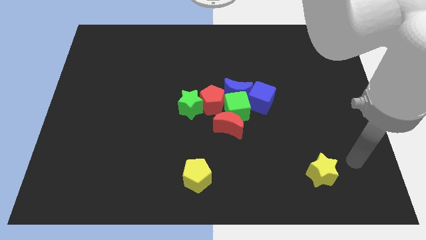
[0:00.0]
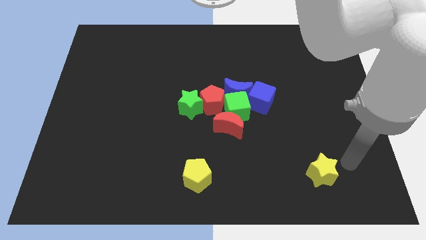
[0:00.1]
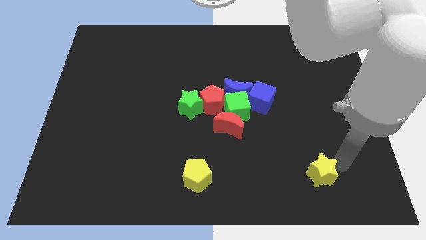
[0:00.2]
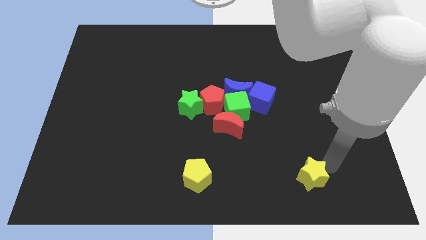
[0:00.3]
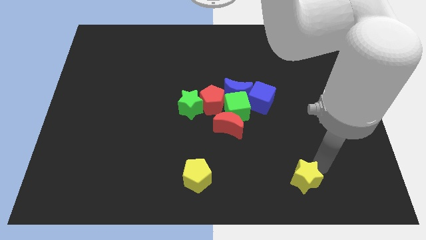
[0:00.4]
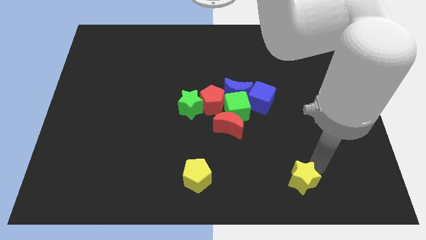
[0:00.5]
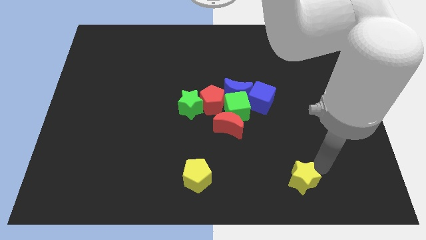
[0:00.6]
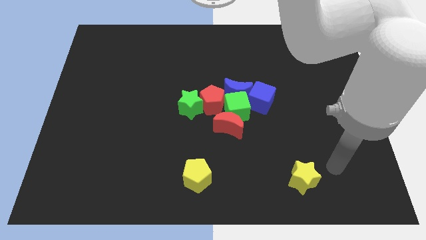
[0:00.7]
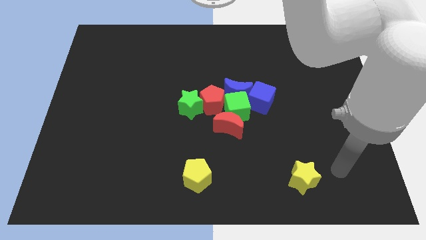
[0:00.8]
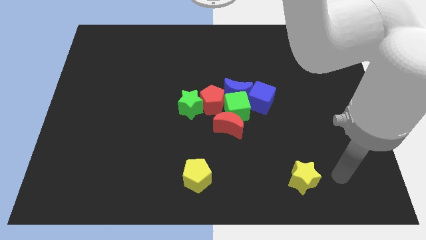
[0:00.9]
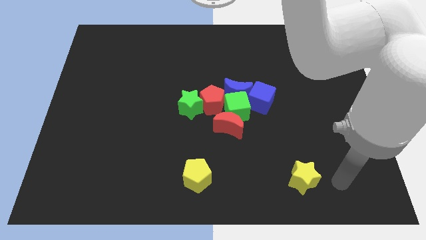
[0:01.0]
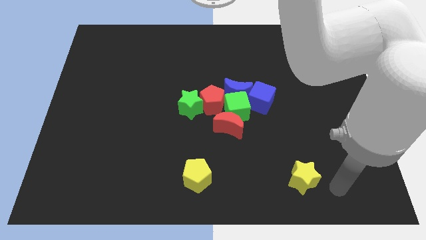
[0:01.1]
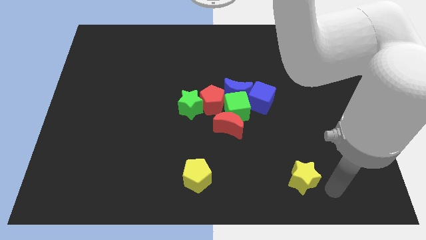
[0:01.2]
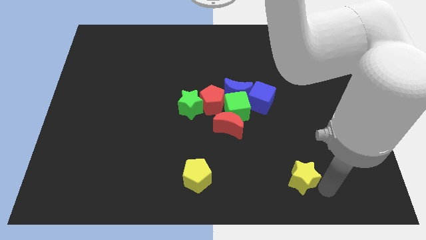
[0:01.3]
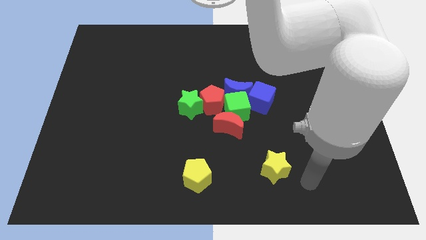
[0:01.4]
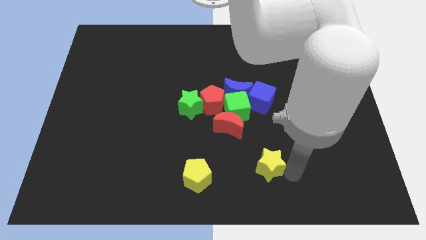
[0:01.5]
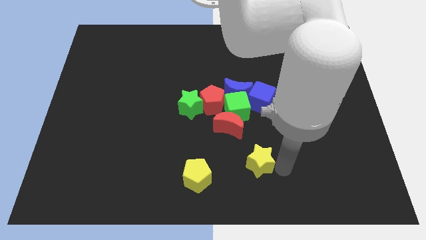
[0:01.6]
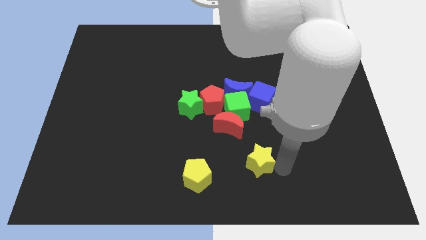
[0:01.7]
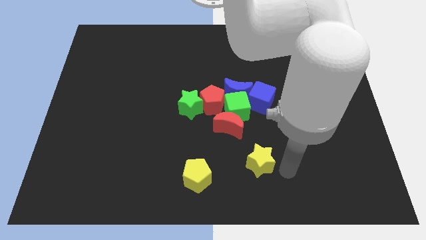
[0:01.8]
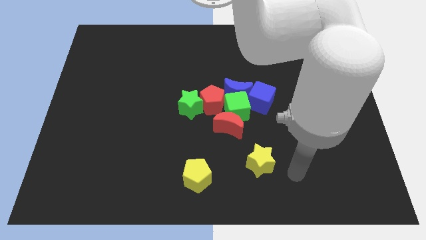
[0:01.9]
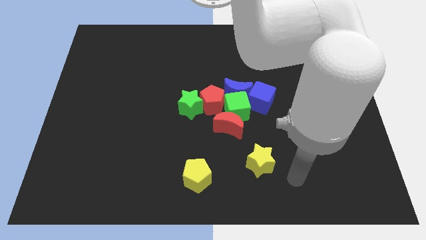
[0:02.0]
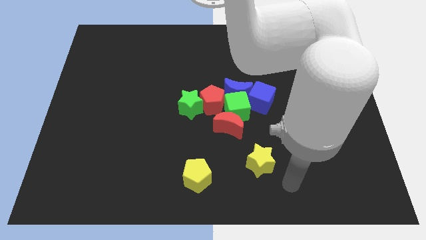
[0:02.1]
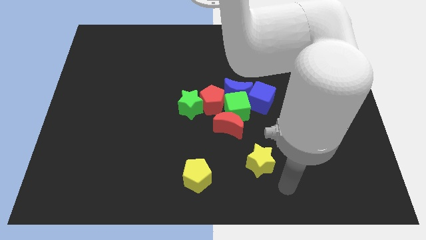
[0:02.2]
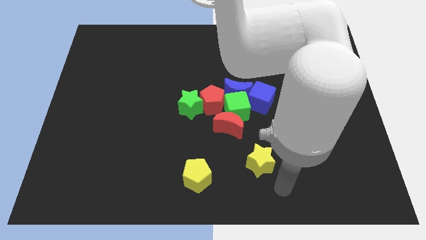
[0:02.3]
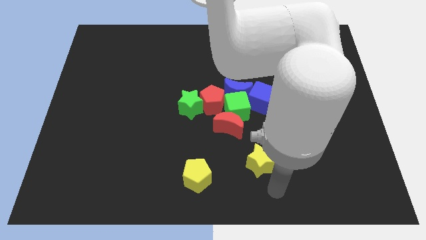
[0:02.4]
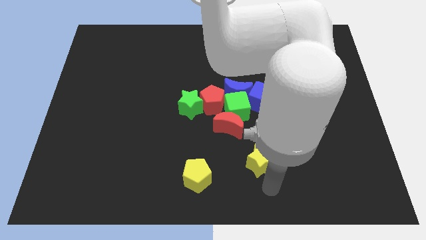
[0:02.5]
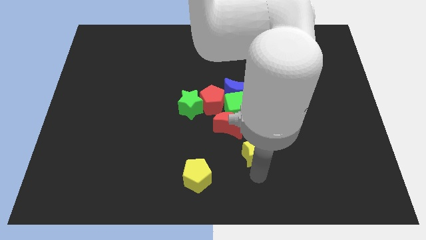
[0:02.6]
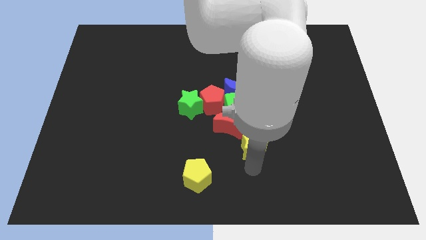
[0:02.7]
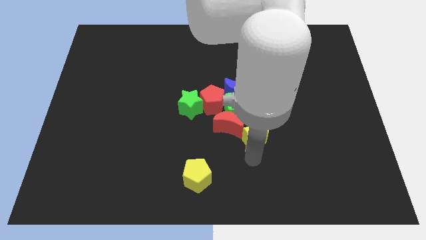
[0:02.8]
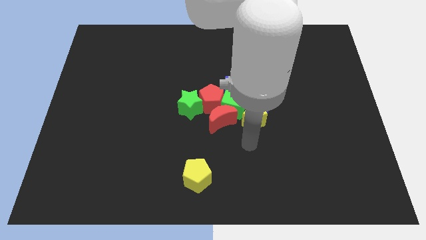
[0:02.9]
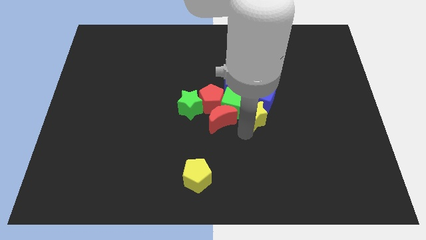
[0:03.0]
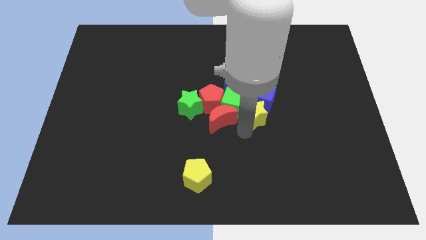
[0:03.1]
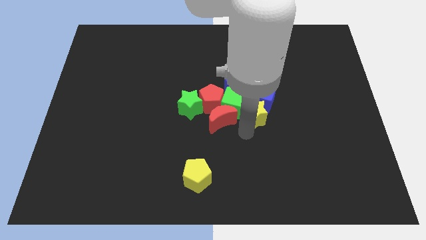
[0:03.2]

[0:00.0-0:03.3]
place the yellow star at the bottom of the blue cube

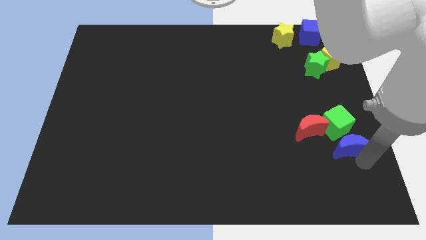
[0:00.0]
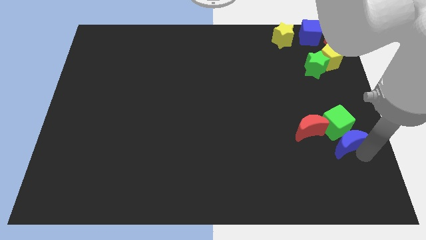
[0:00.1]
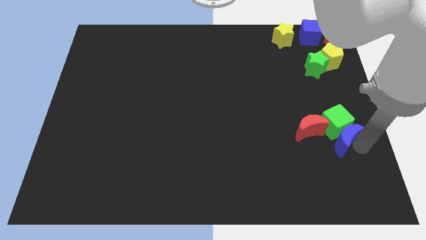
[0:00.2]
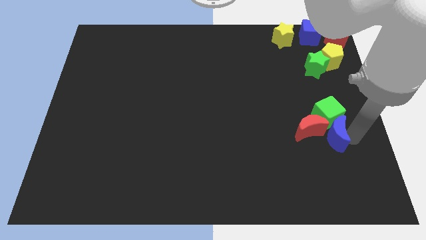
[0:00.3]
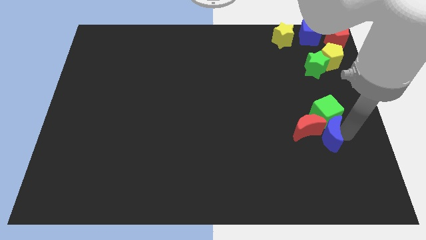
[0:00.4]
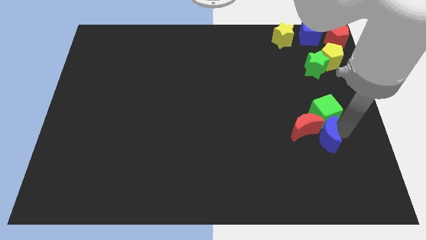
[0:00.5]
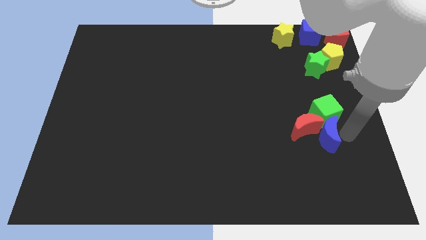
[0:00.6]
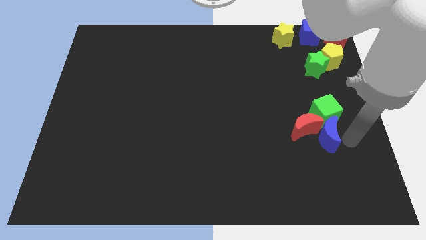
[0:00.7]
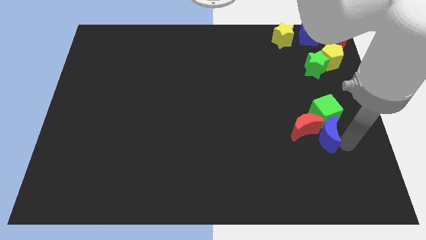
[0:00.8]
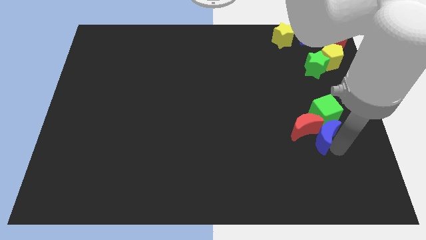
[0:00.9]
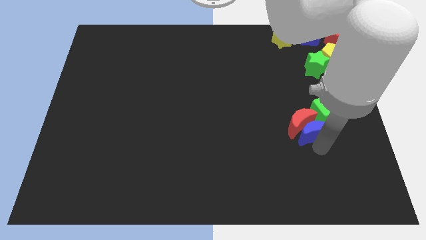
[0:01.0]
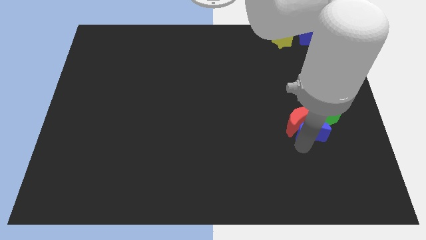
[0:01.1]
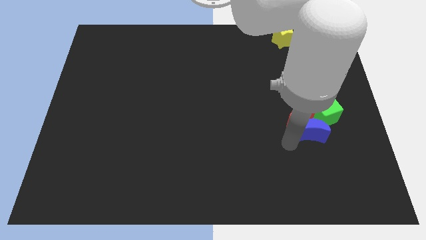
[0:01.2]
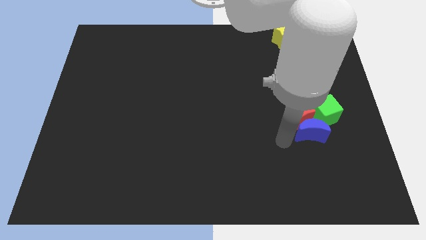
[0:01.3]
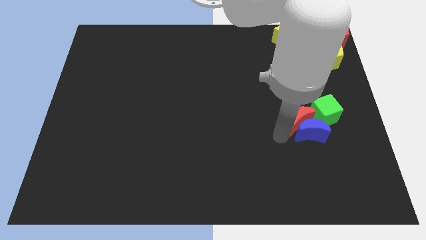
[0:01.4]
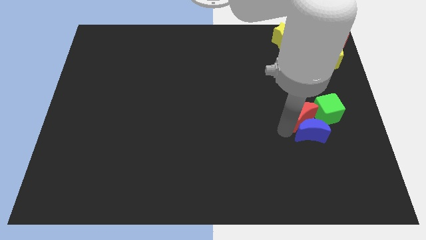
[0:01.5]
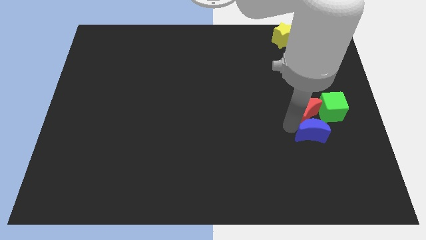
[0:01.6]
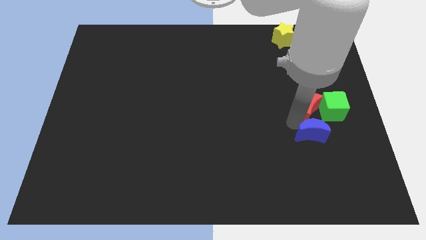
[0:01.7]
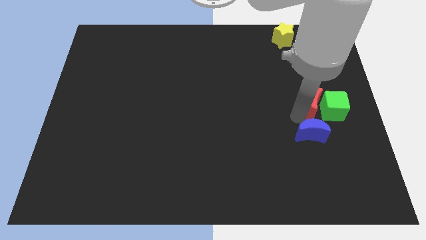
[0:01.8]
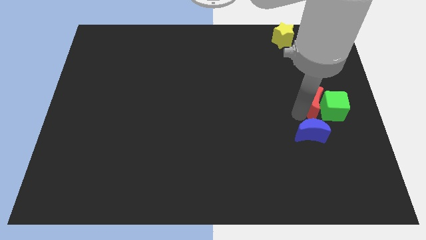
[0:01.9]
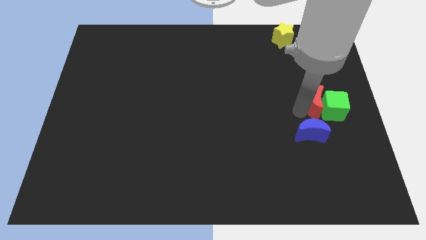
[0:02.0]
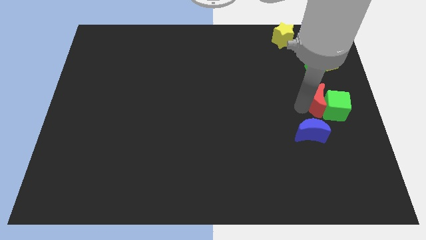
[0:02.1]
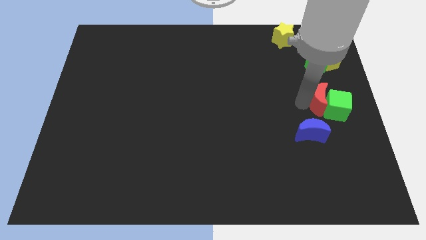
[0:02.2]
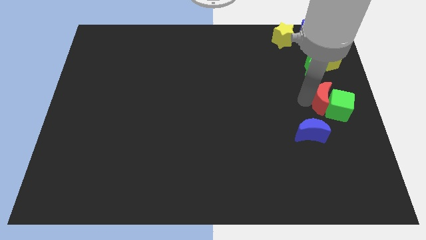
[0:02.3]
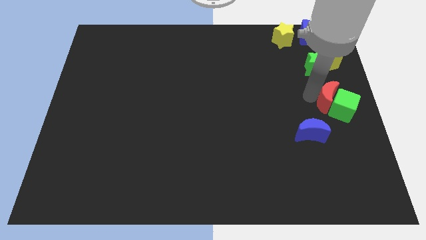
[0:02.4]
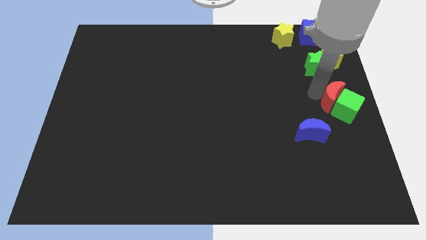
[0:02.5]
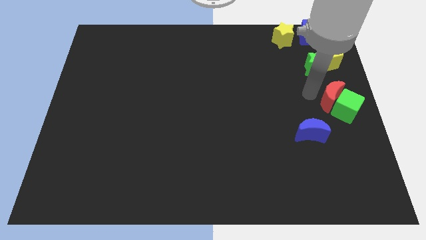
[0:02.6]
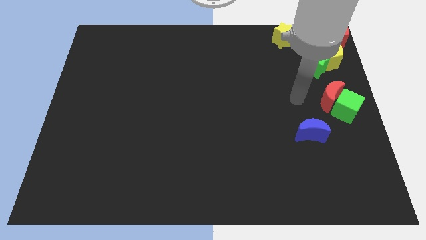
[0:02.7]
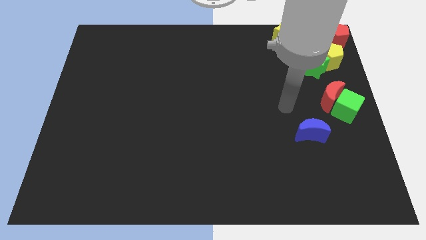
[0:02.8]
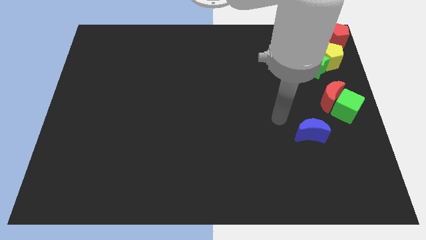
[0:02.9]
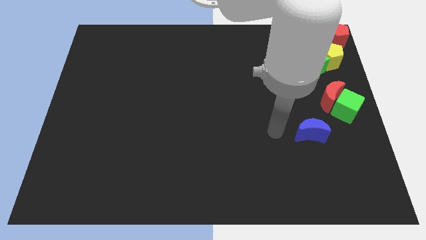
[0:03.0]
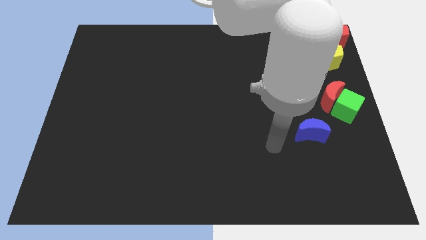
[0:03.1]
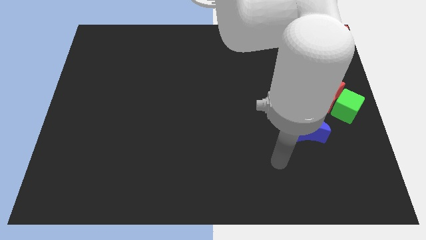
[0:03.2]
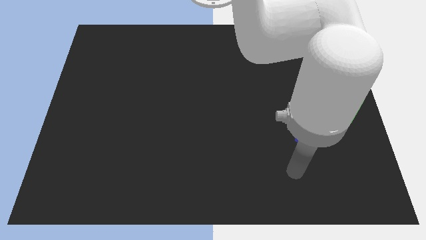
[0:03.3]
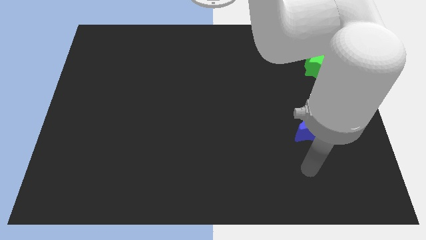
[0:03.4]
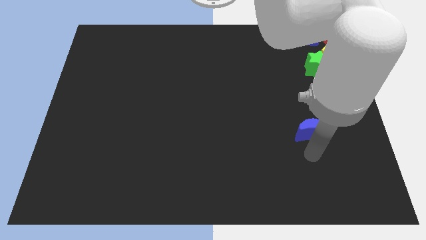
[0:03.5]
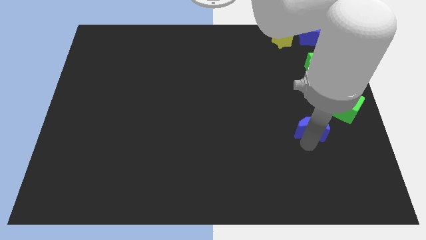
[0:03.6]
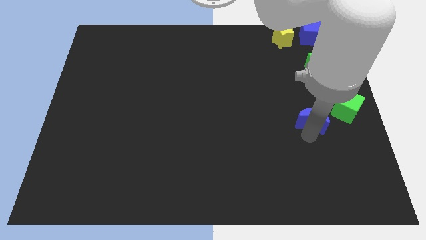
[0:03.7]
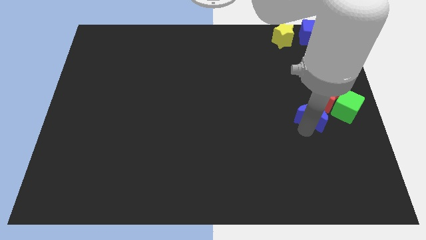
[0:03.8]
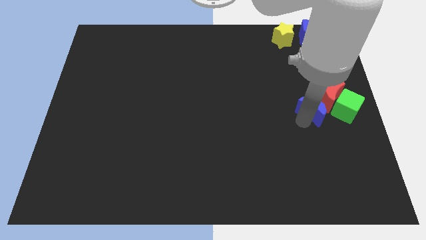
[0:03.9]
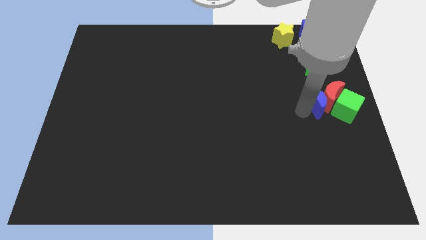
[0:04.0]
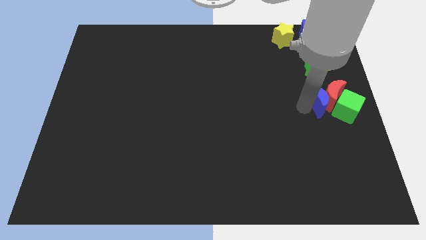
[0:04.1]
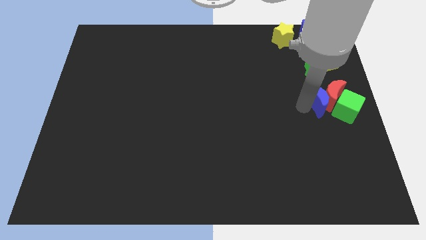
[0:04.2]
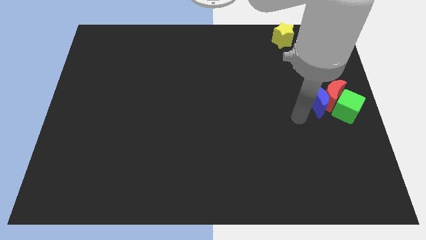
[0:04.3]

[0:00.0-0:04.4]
move the blue crescent left to the red moon

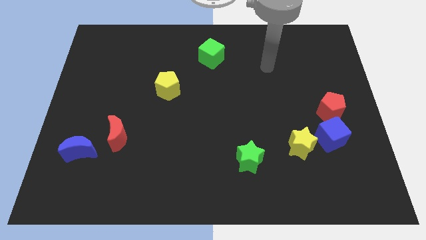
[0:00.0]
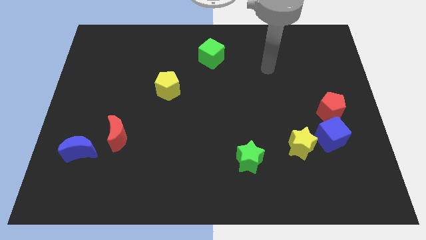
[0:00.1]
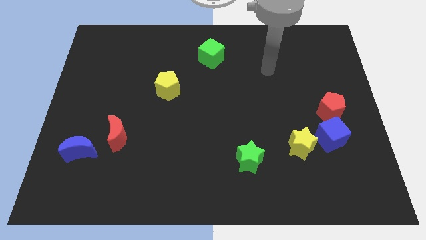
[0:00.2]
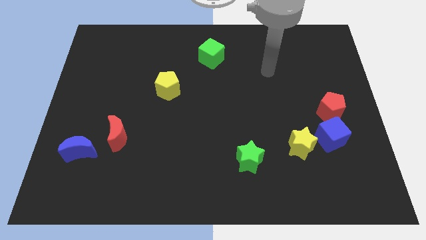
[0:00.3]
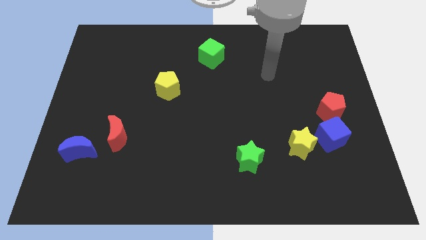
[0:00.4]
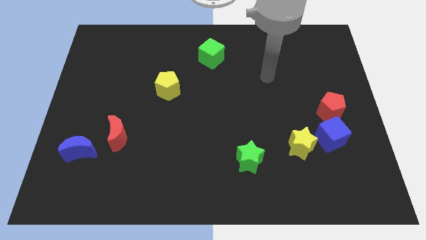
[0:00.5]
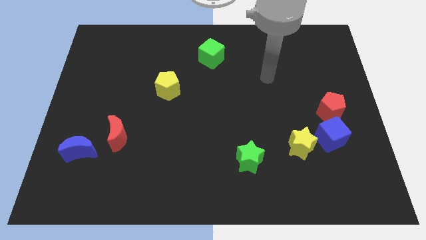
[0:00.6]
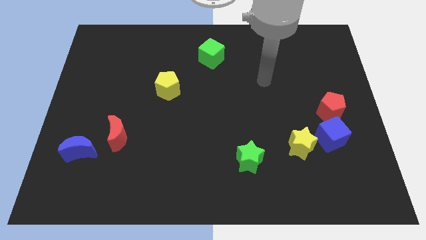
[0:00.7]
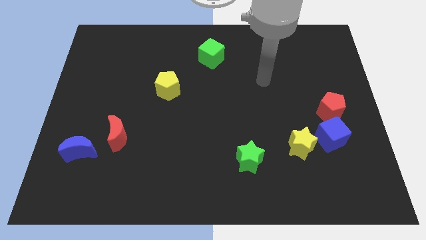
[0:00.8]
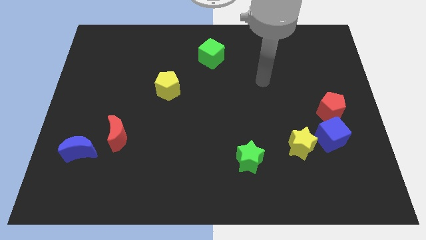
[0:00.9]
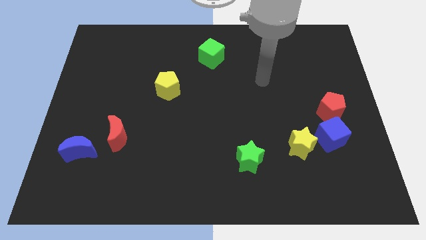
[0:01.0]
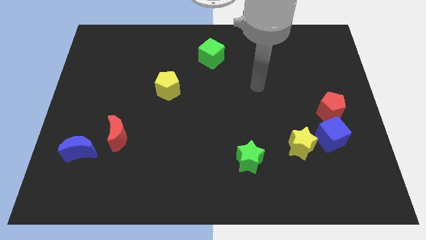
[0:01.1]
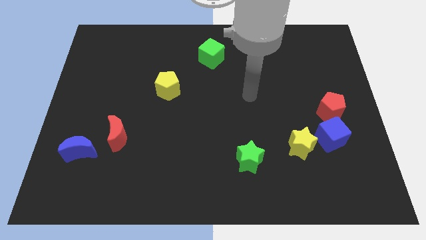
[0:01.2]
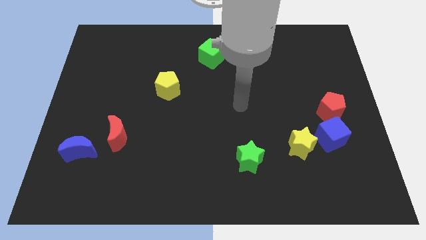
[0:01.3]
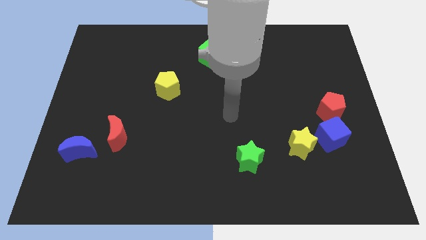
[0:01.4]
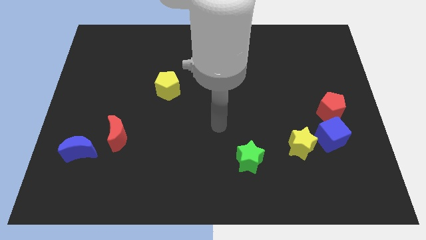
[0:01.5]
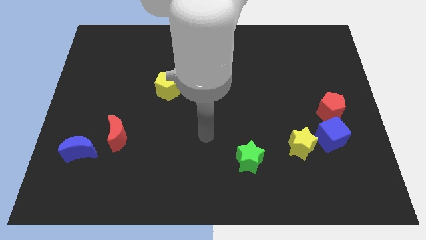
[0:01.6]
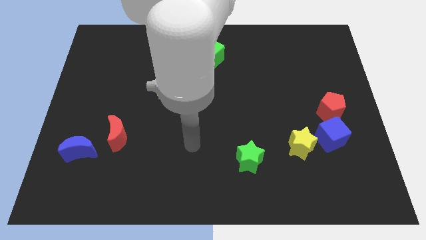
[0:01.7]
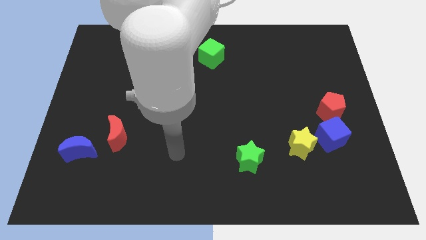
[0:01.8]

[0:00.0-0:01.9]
move your arm in between the red crescent and green star
